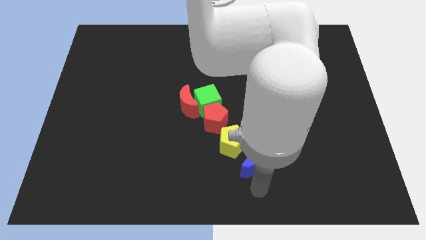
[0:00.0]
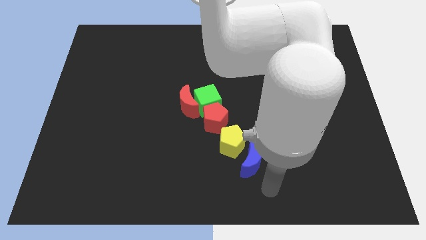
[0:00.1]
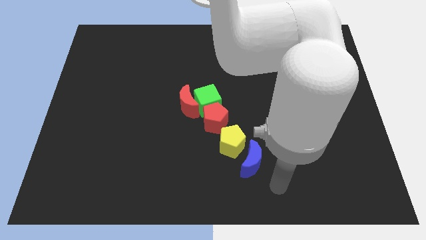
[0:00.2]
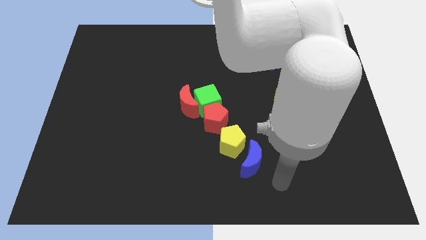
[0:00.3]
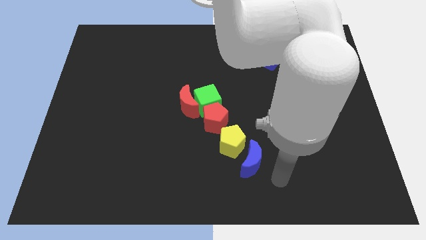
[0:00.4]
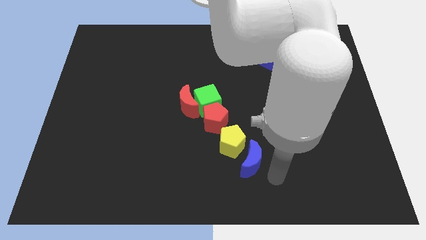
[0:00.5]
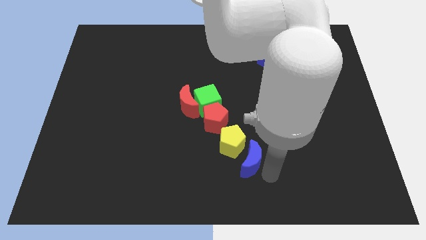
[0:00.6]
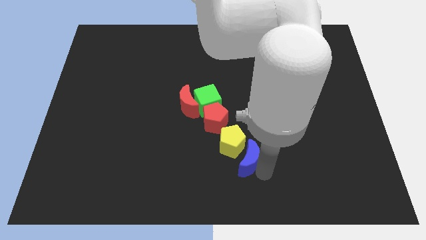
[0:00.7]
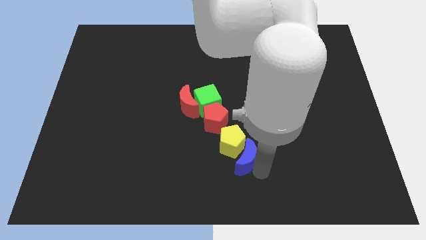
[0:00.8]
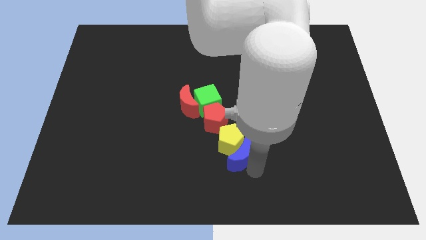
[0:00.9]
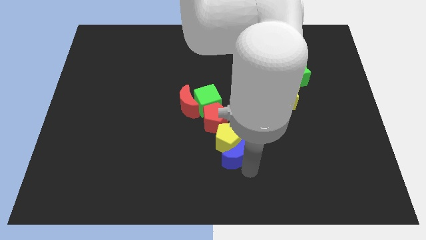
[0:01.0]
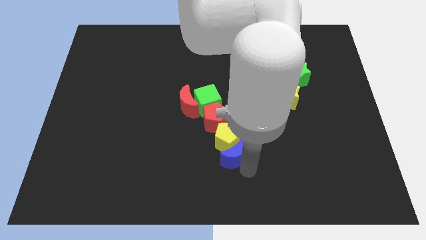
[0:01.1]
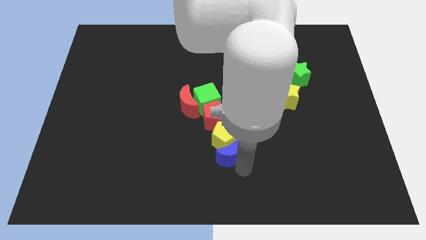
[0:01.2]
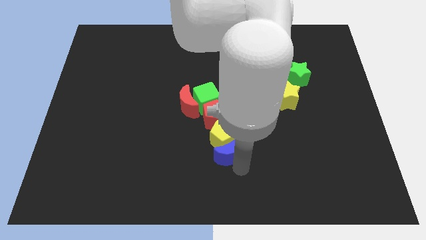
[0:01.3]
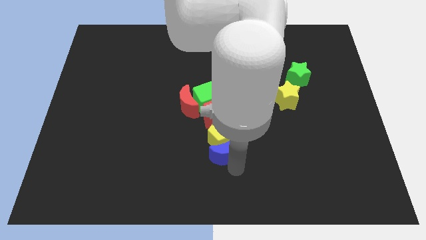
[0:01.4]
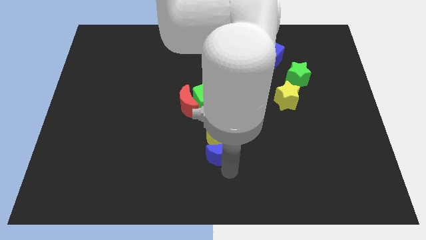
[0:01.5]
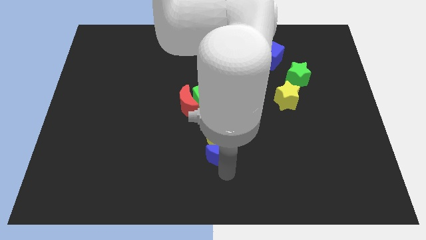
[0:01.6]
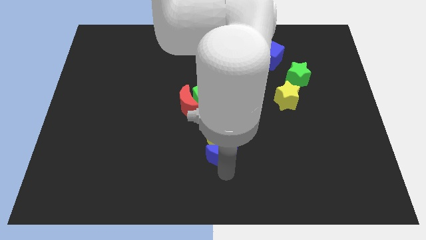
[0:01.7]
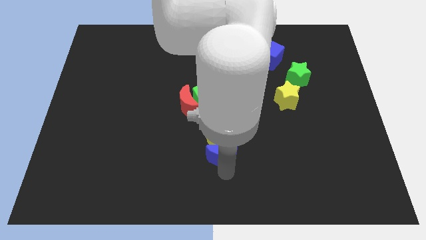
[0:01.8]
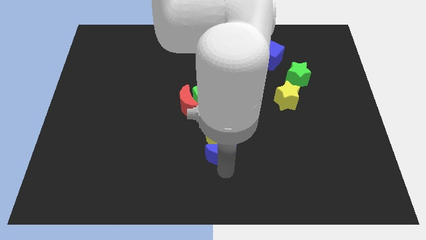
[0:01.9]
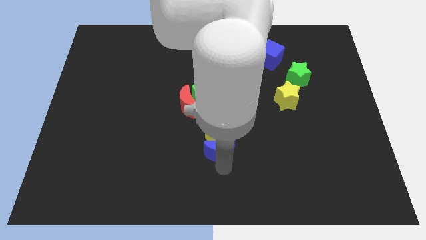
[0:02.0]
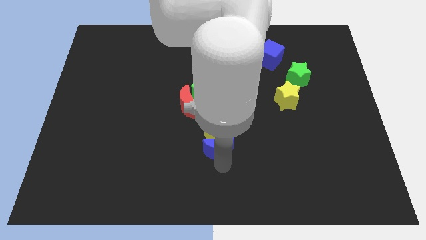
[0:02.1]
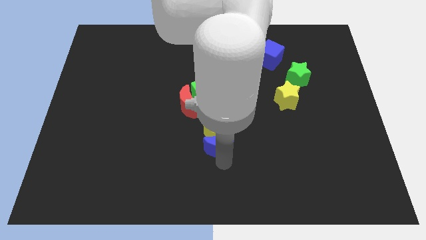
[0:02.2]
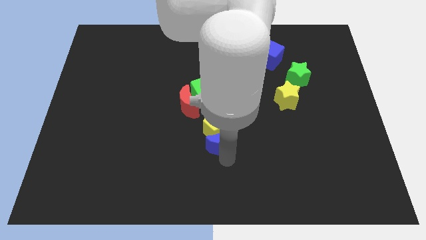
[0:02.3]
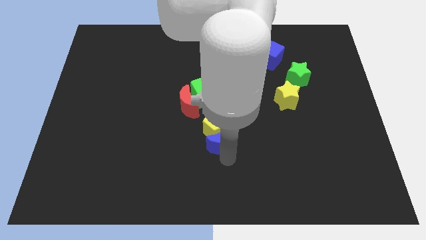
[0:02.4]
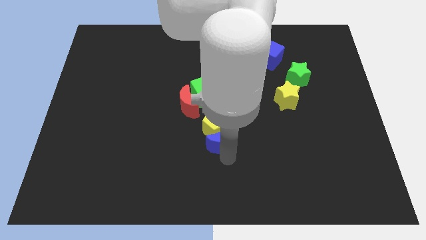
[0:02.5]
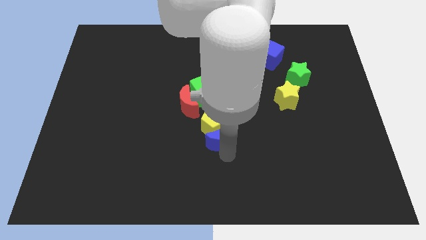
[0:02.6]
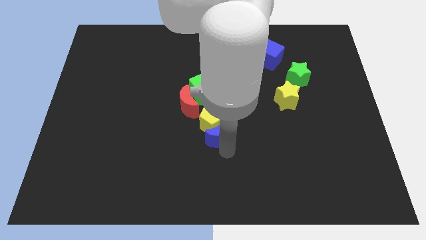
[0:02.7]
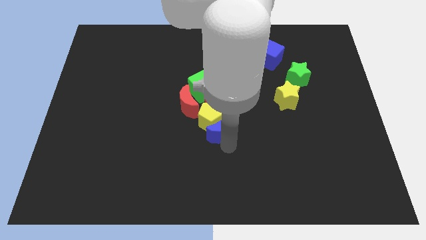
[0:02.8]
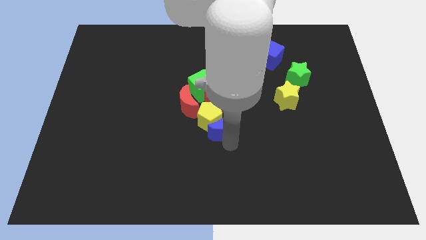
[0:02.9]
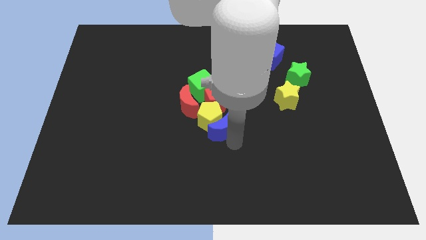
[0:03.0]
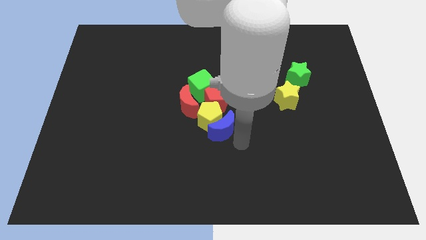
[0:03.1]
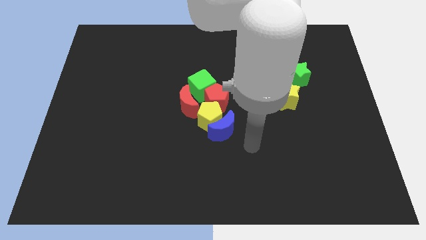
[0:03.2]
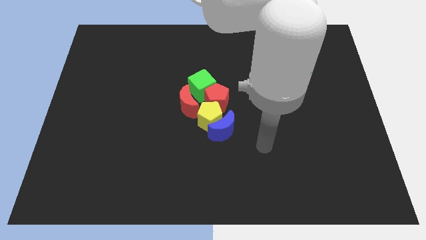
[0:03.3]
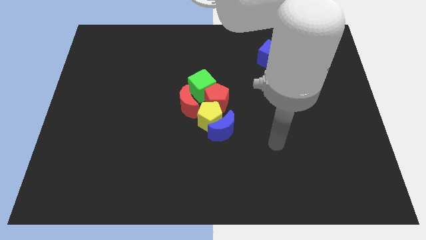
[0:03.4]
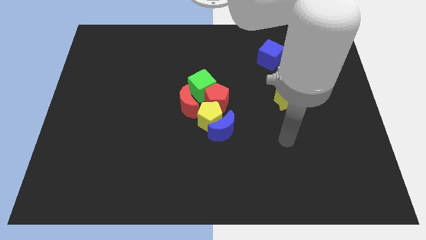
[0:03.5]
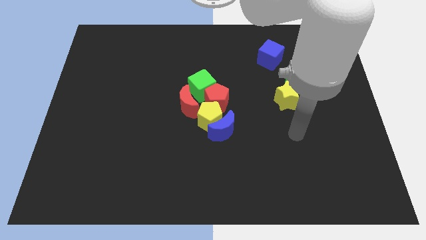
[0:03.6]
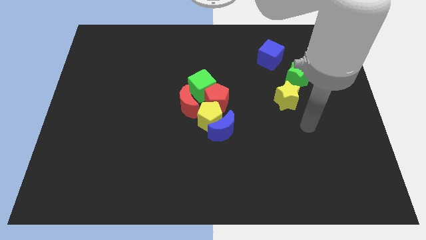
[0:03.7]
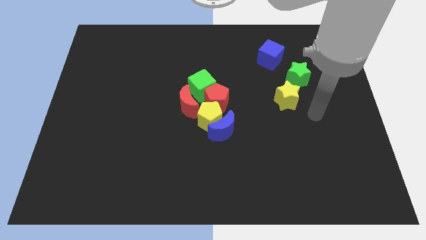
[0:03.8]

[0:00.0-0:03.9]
push the blue moon and yellow pentagon into the group of blocks

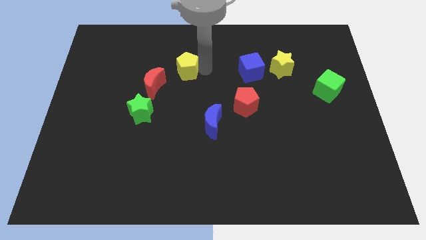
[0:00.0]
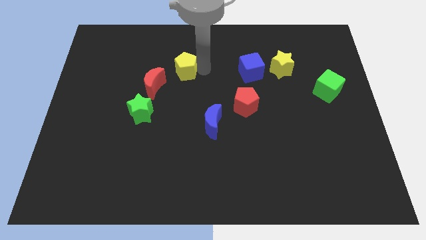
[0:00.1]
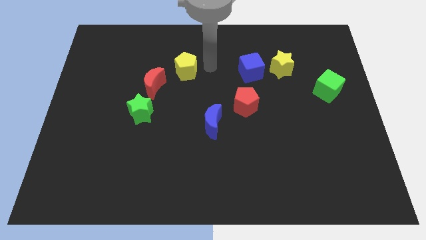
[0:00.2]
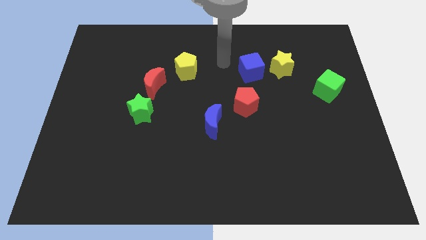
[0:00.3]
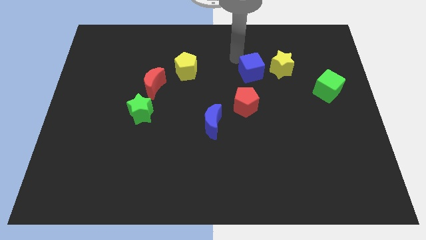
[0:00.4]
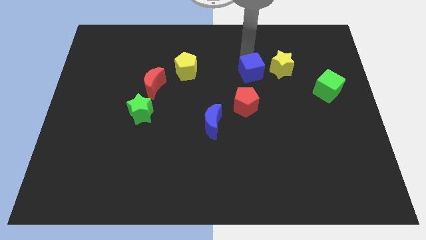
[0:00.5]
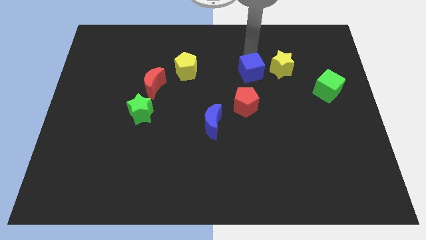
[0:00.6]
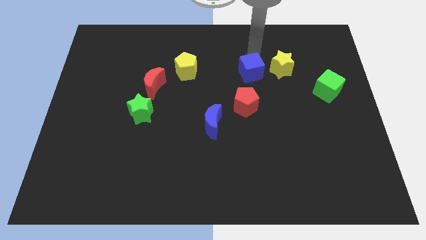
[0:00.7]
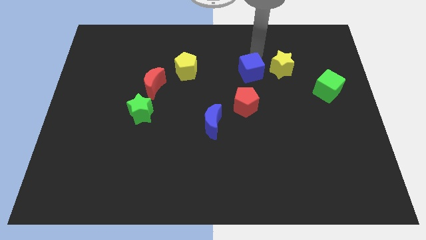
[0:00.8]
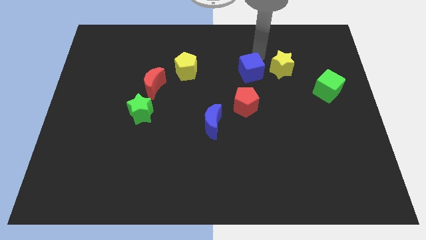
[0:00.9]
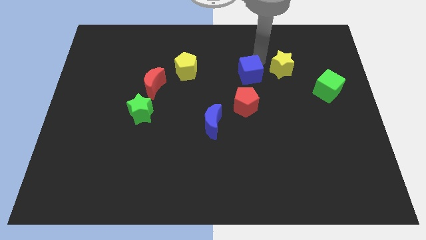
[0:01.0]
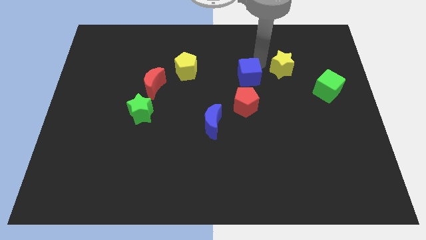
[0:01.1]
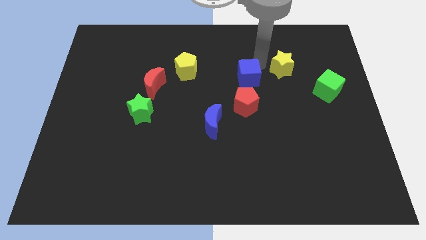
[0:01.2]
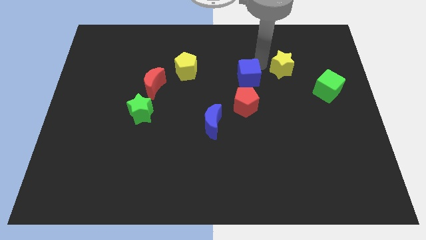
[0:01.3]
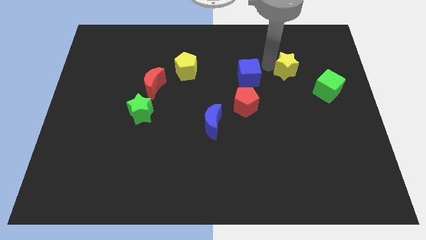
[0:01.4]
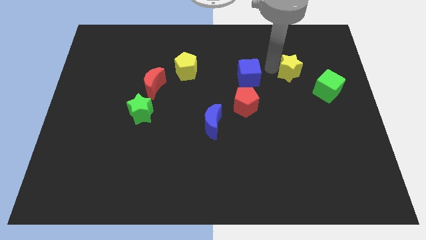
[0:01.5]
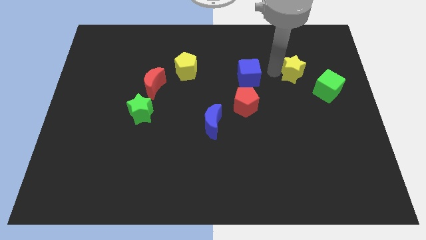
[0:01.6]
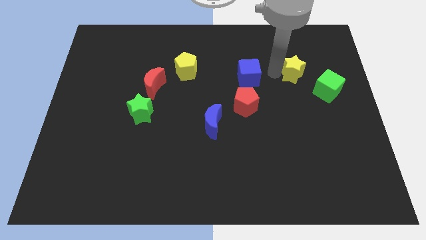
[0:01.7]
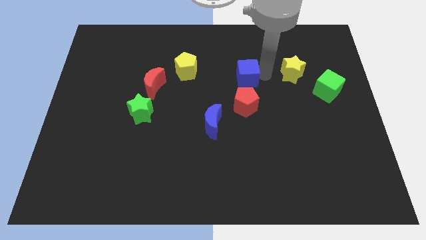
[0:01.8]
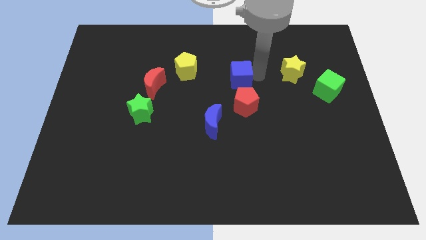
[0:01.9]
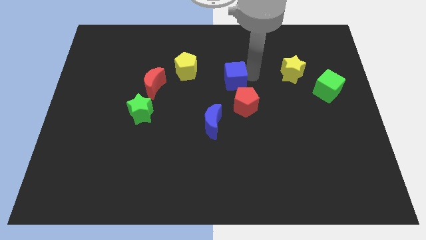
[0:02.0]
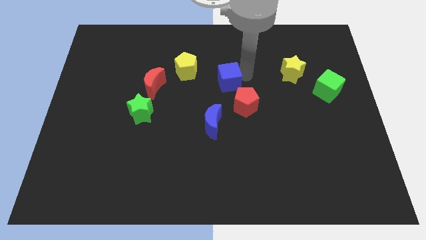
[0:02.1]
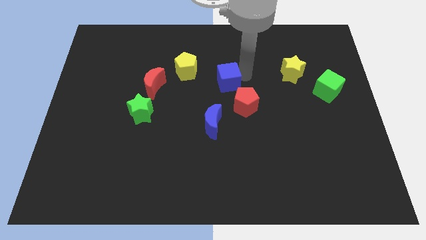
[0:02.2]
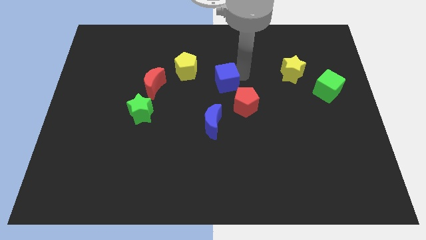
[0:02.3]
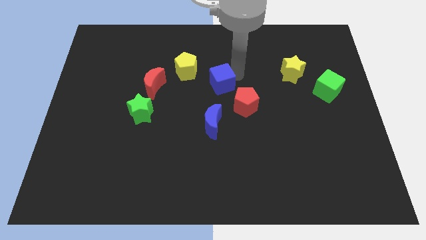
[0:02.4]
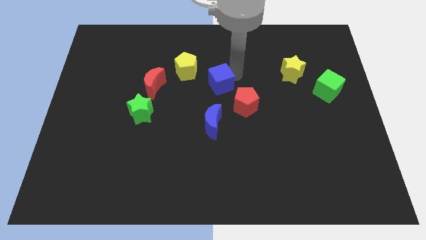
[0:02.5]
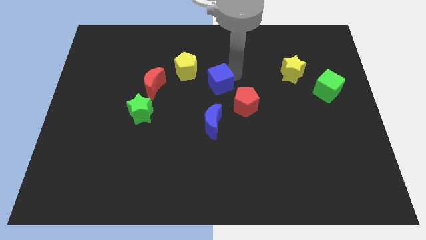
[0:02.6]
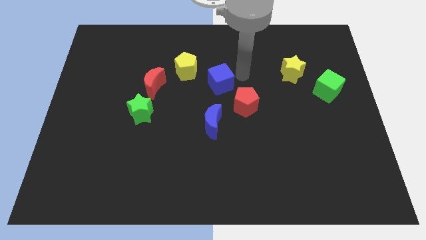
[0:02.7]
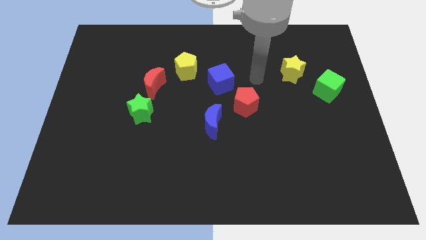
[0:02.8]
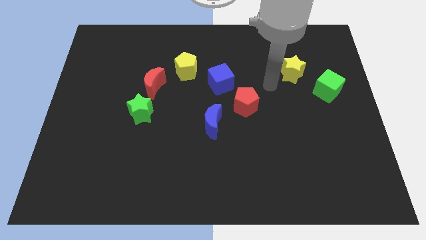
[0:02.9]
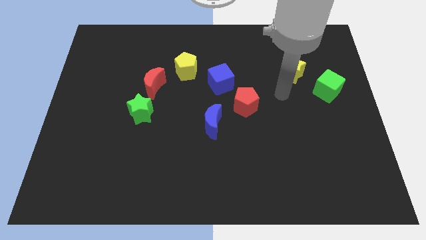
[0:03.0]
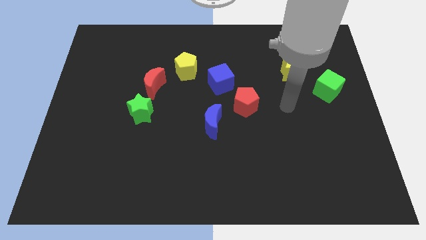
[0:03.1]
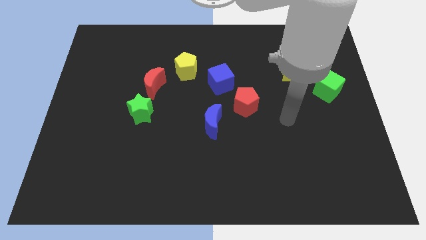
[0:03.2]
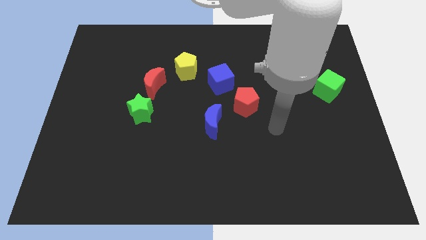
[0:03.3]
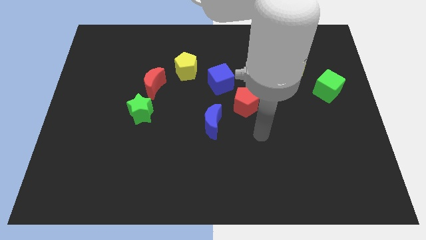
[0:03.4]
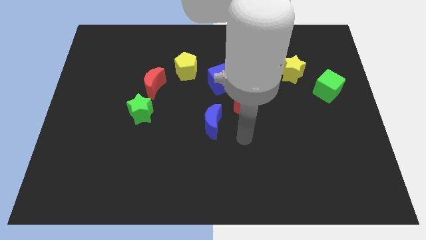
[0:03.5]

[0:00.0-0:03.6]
place the blue cube in between the yellow pentagon and red pentagon

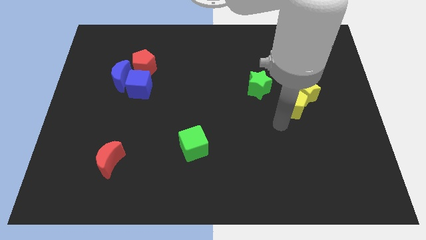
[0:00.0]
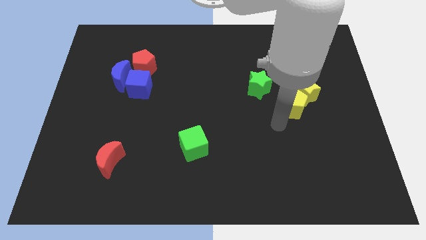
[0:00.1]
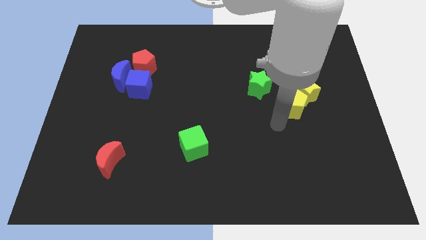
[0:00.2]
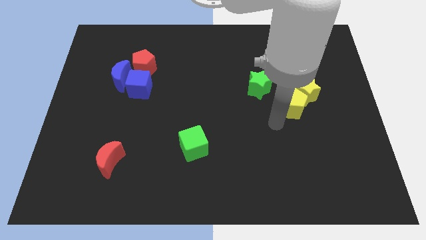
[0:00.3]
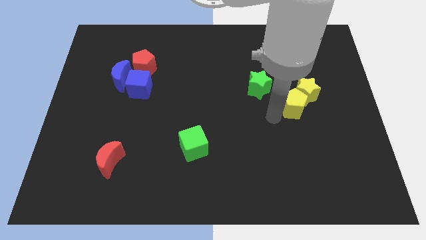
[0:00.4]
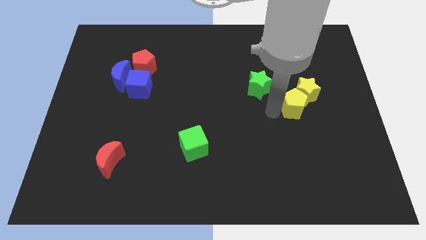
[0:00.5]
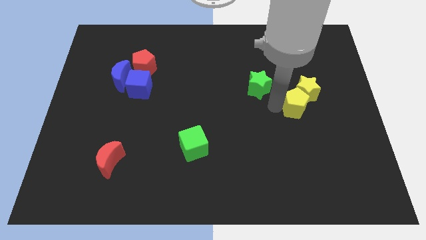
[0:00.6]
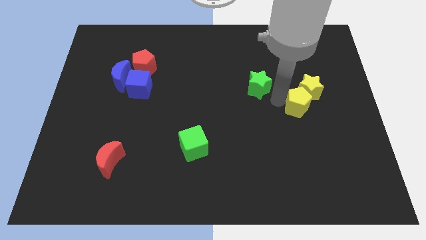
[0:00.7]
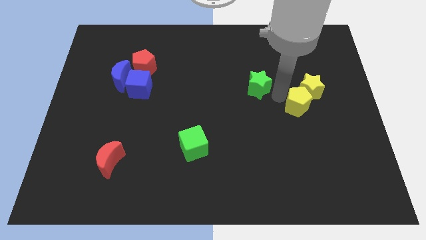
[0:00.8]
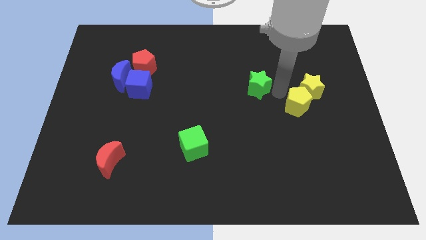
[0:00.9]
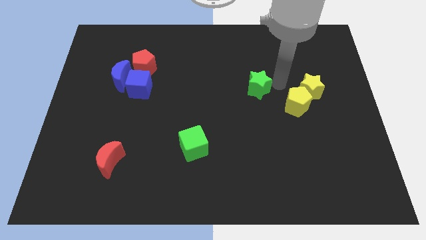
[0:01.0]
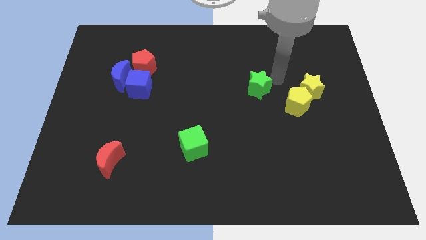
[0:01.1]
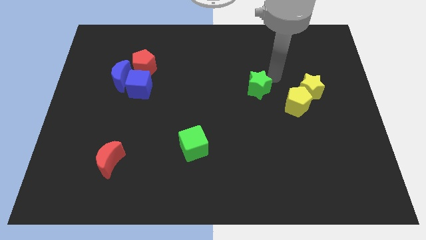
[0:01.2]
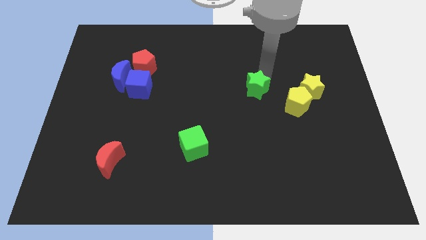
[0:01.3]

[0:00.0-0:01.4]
move your arm towards the top of the green star

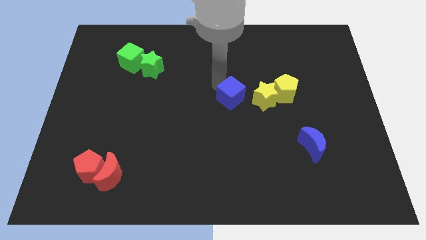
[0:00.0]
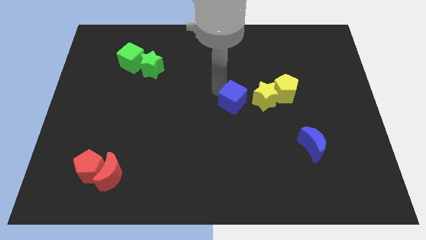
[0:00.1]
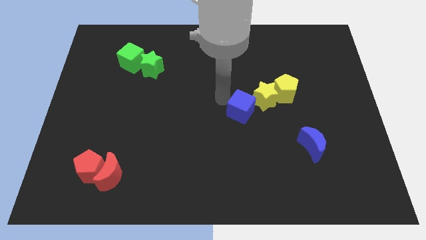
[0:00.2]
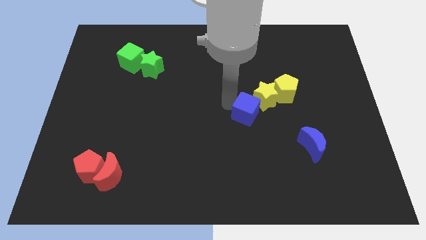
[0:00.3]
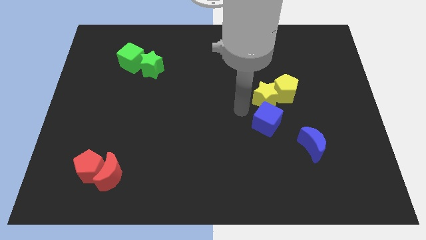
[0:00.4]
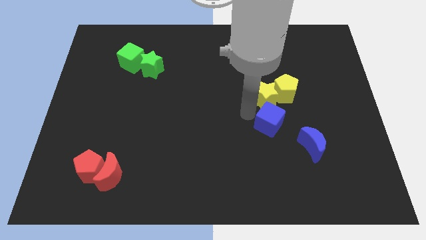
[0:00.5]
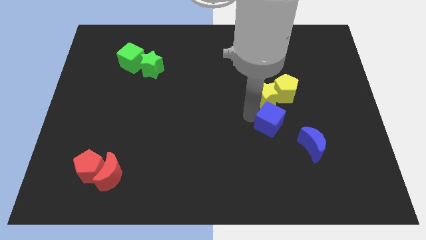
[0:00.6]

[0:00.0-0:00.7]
place the blue cube below the yellow star
